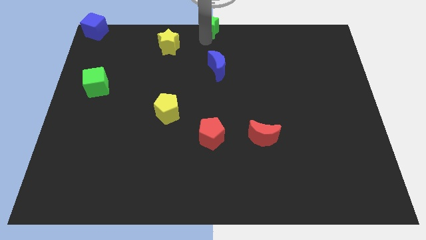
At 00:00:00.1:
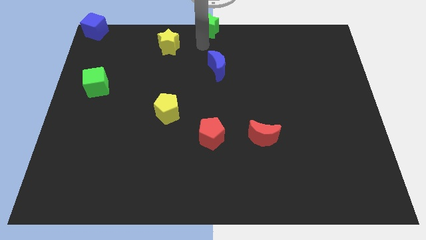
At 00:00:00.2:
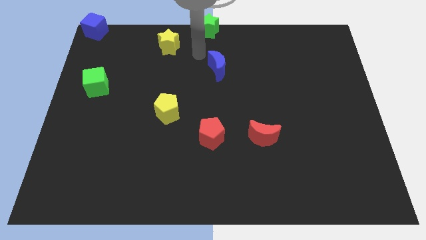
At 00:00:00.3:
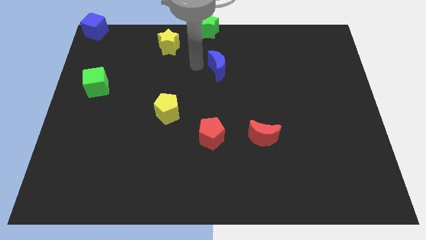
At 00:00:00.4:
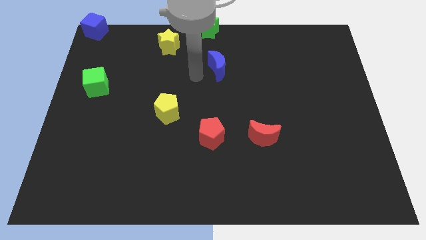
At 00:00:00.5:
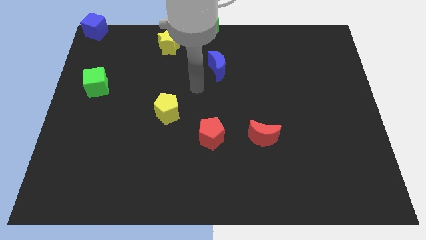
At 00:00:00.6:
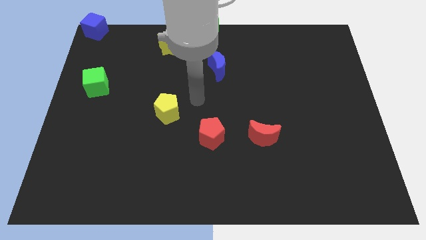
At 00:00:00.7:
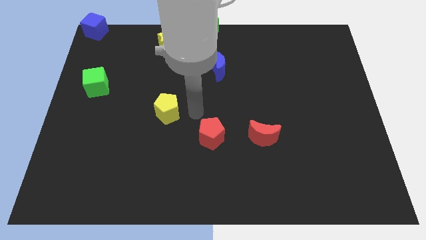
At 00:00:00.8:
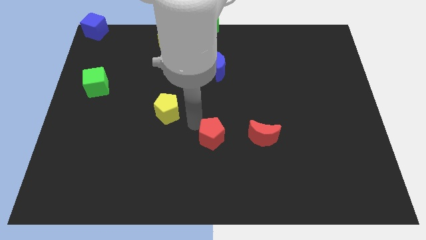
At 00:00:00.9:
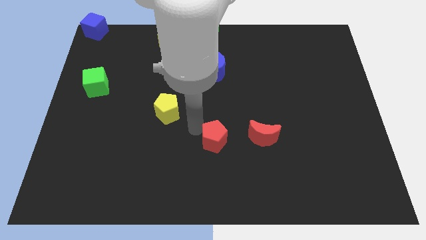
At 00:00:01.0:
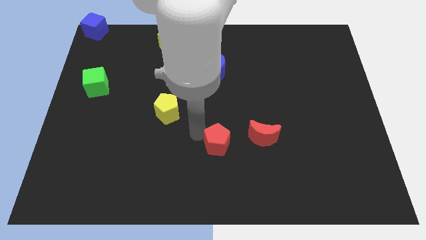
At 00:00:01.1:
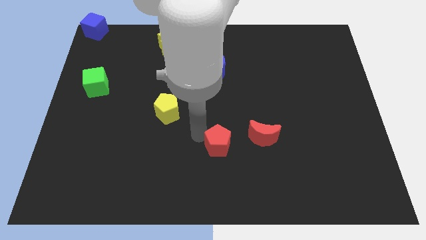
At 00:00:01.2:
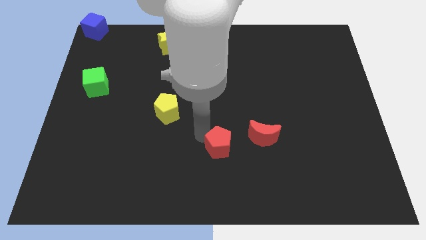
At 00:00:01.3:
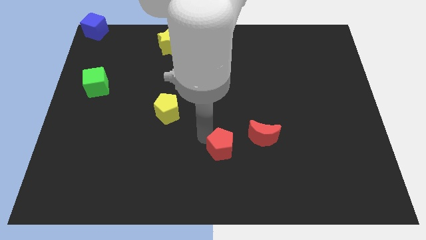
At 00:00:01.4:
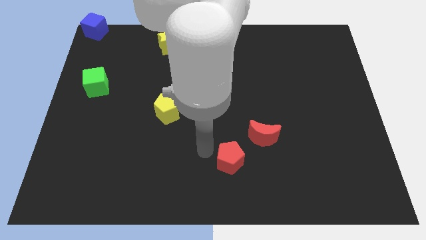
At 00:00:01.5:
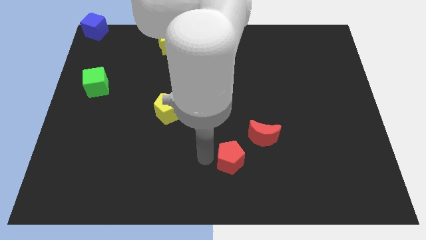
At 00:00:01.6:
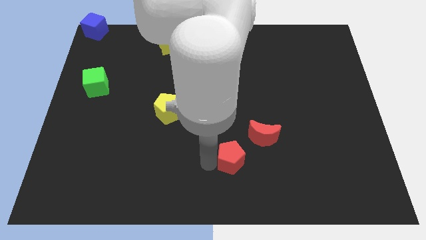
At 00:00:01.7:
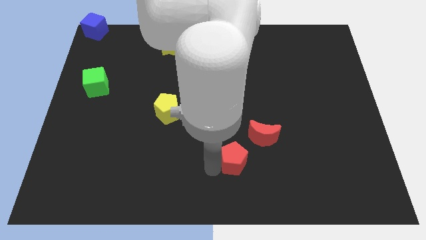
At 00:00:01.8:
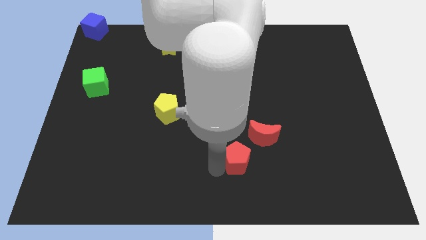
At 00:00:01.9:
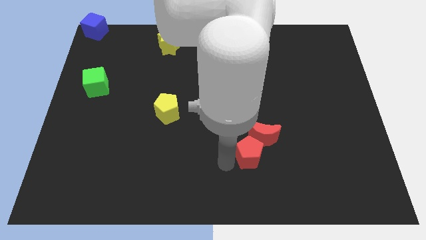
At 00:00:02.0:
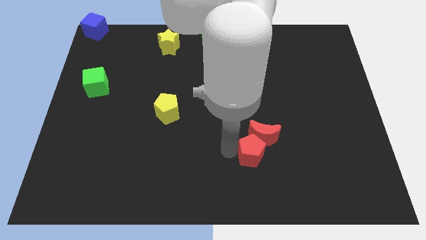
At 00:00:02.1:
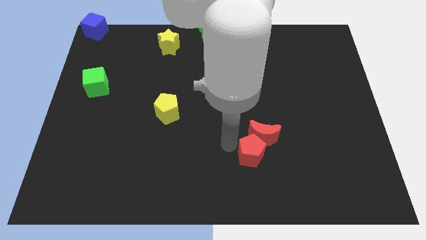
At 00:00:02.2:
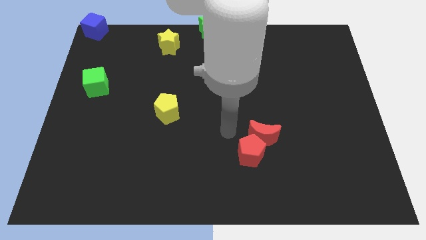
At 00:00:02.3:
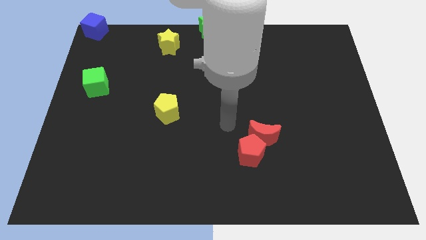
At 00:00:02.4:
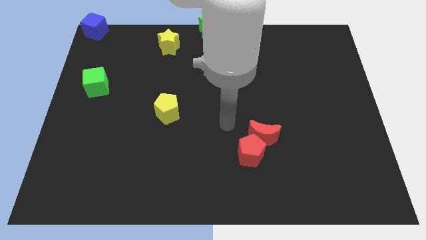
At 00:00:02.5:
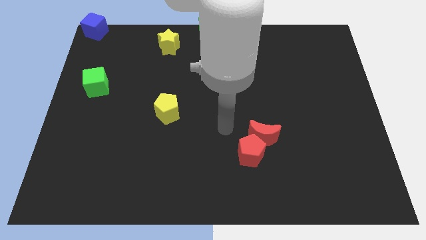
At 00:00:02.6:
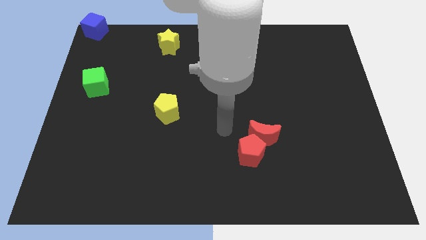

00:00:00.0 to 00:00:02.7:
move the red pentagon at the bottom of red moon

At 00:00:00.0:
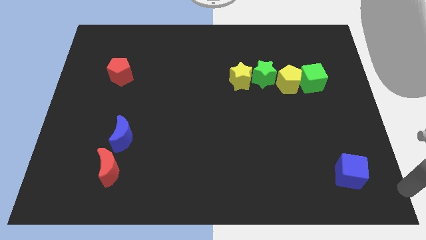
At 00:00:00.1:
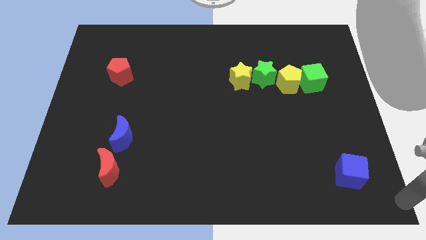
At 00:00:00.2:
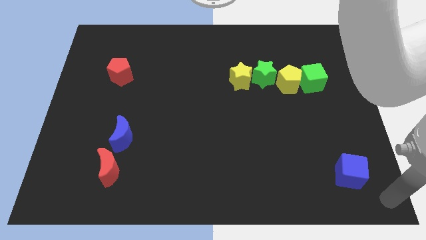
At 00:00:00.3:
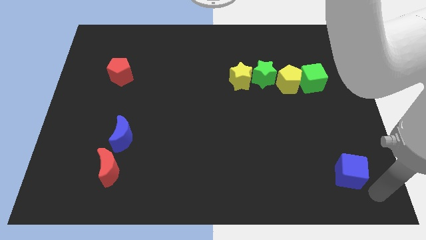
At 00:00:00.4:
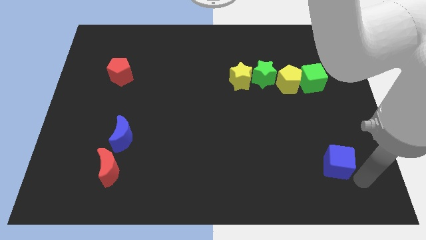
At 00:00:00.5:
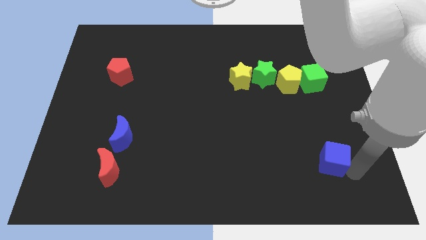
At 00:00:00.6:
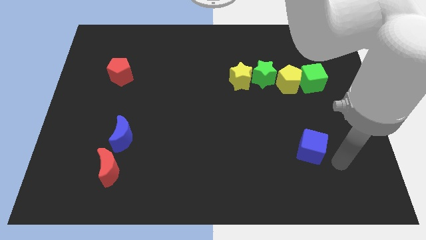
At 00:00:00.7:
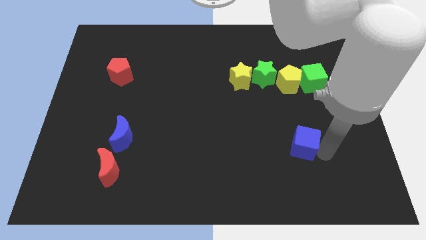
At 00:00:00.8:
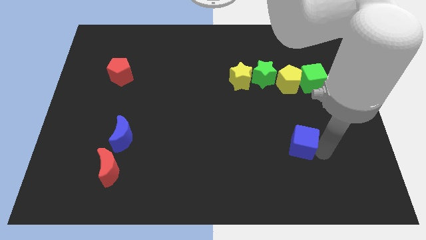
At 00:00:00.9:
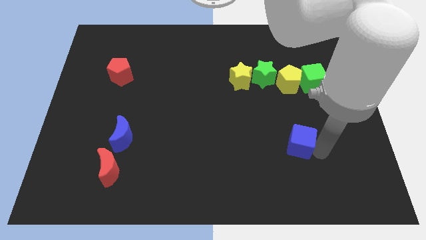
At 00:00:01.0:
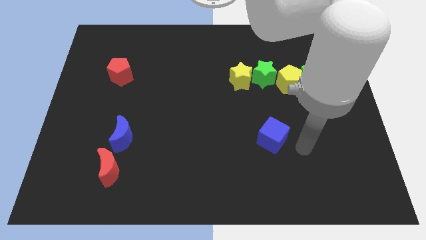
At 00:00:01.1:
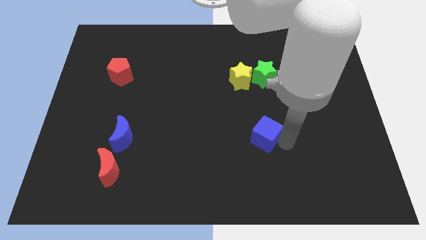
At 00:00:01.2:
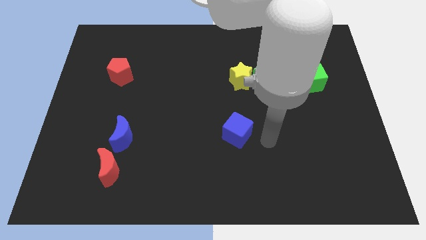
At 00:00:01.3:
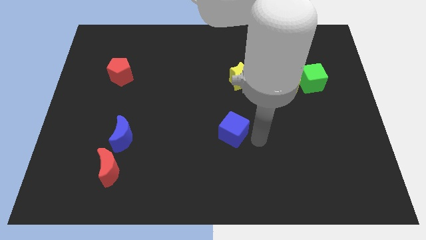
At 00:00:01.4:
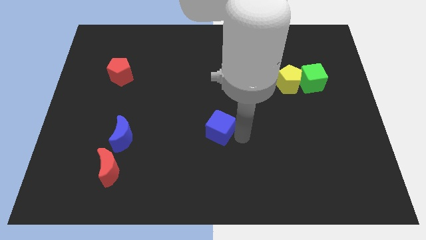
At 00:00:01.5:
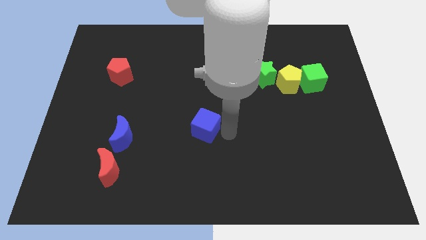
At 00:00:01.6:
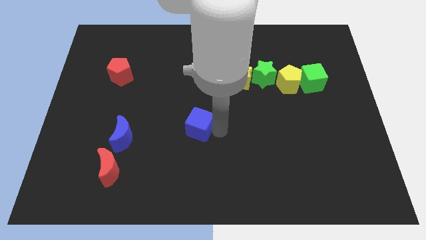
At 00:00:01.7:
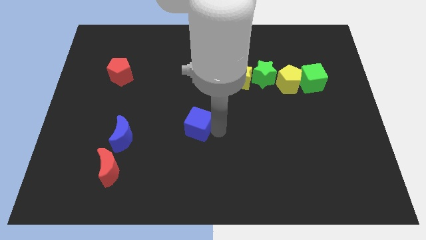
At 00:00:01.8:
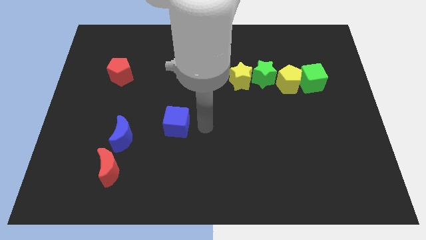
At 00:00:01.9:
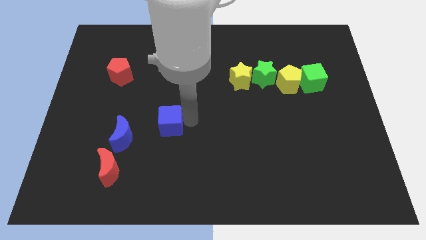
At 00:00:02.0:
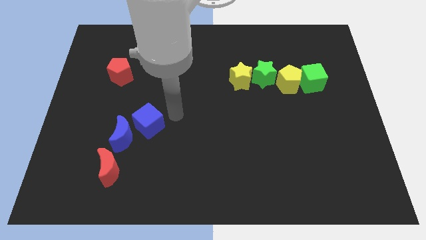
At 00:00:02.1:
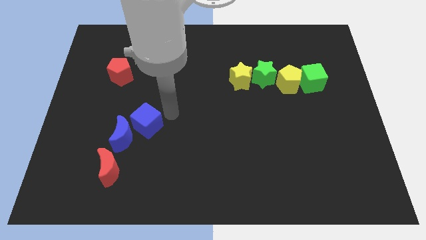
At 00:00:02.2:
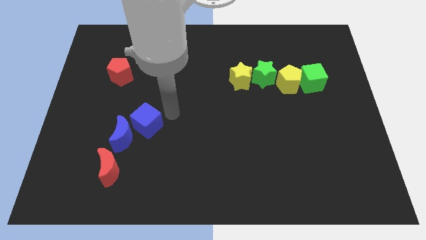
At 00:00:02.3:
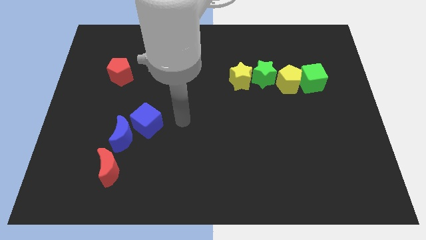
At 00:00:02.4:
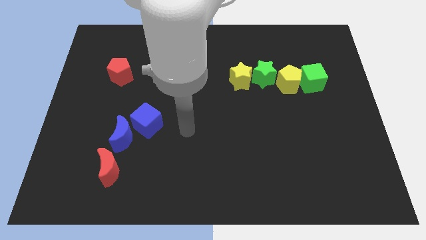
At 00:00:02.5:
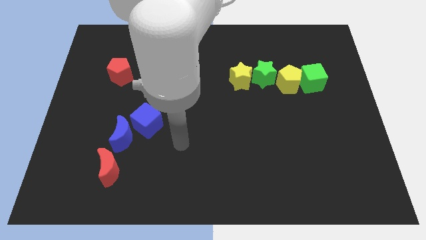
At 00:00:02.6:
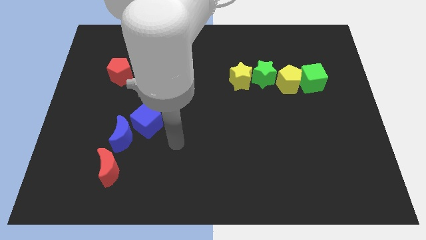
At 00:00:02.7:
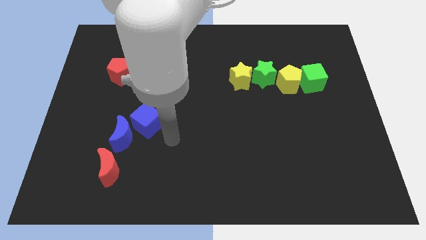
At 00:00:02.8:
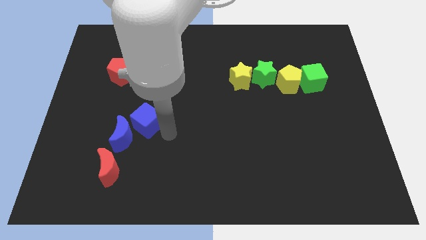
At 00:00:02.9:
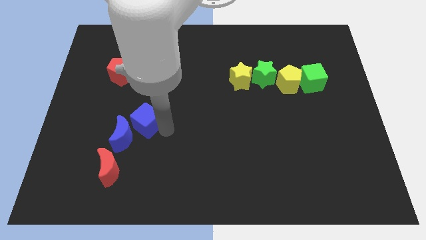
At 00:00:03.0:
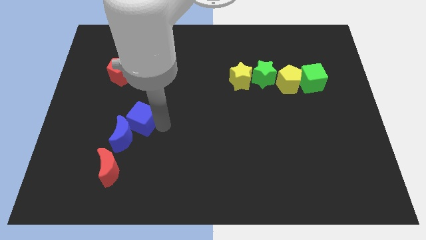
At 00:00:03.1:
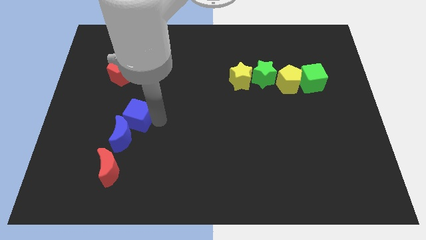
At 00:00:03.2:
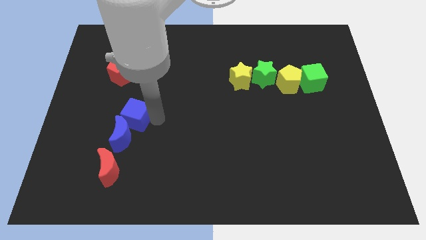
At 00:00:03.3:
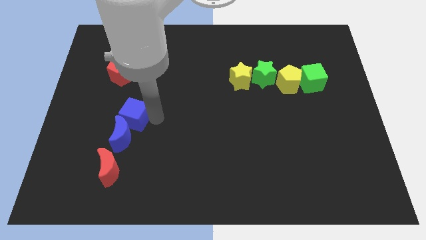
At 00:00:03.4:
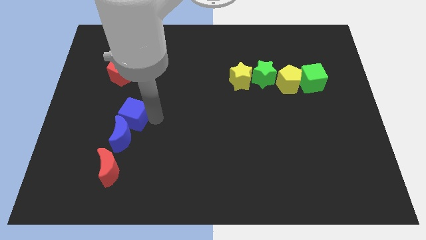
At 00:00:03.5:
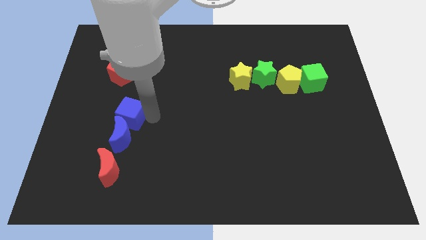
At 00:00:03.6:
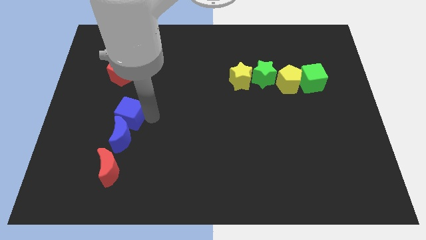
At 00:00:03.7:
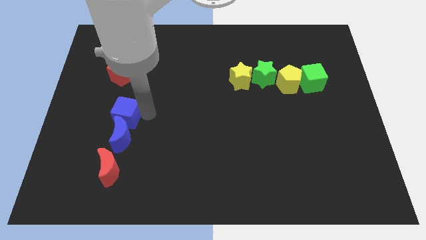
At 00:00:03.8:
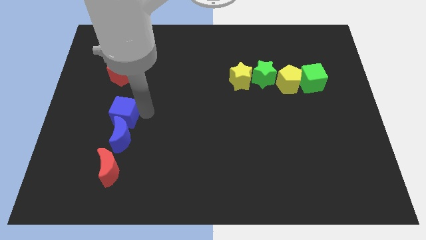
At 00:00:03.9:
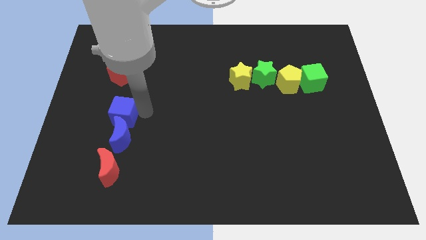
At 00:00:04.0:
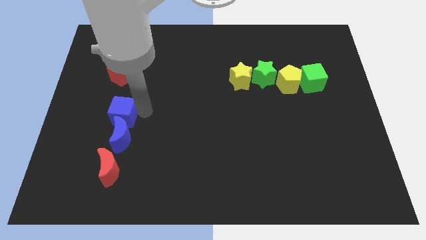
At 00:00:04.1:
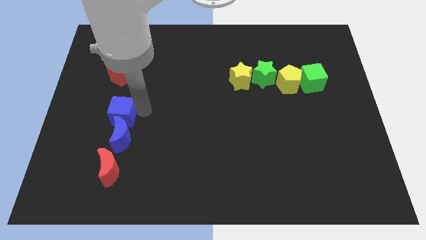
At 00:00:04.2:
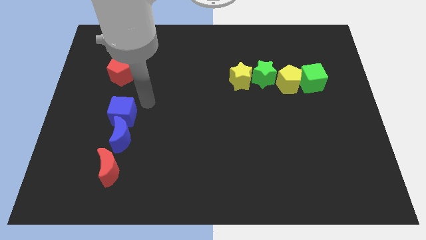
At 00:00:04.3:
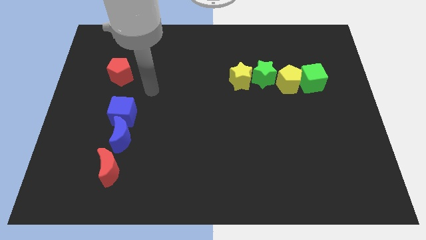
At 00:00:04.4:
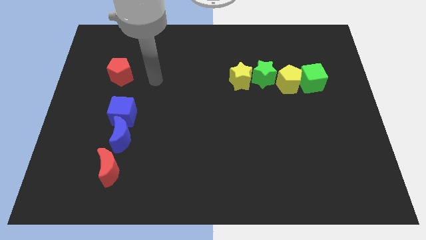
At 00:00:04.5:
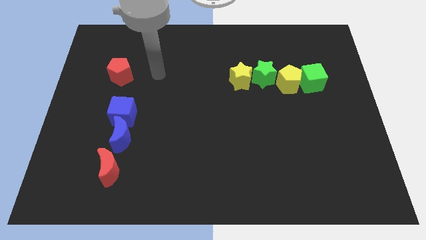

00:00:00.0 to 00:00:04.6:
place blue cube on the top of blue crescent

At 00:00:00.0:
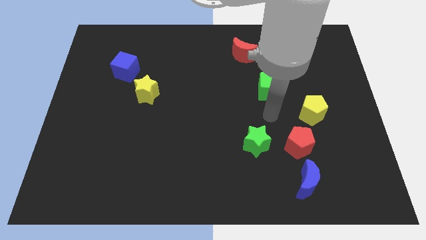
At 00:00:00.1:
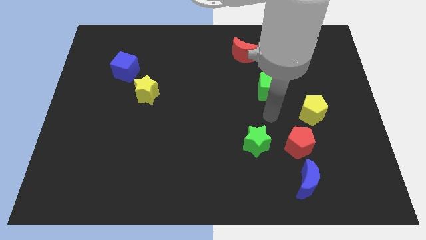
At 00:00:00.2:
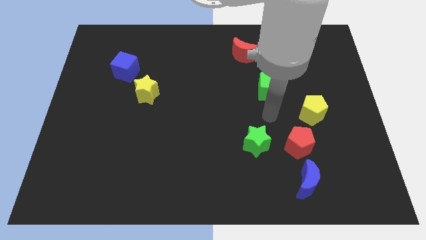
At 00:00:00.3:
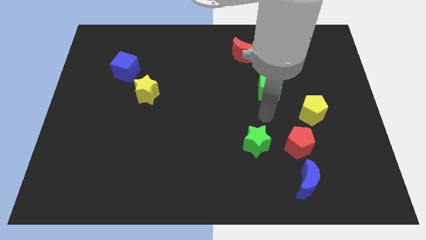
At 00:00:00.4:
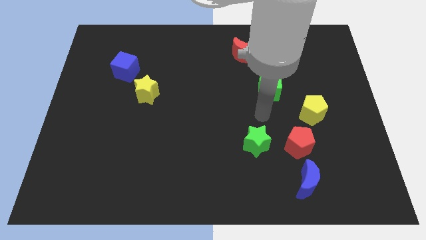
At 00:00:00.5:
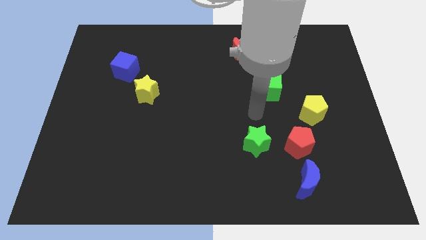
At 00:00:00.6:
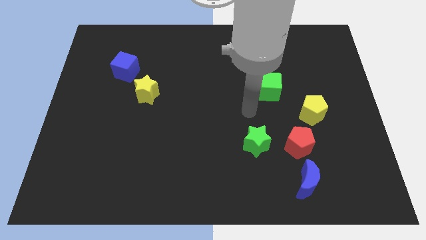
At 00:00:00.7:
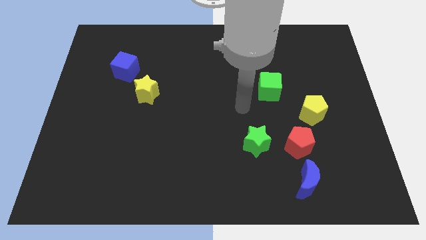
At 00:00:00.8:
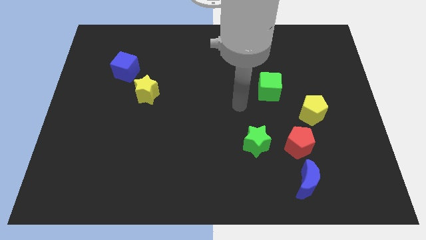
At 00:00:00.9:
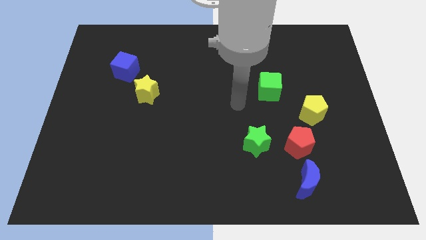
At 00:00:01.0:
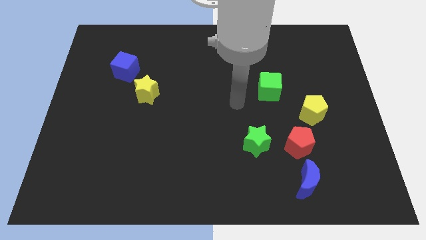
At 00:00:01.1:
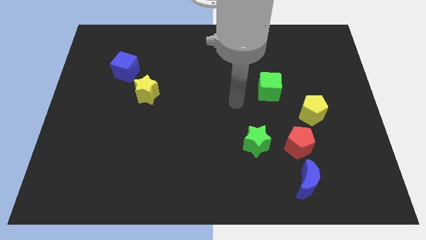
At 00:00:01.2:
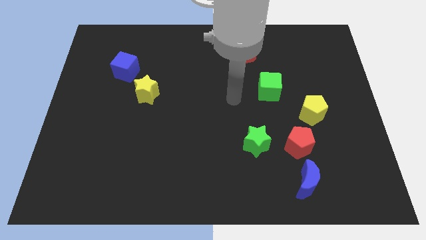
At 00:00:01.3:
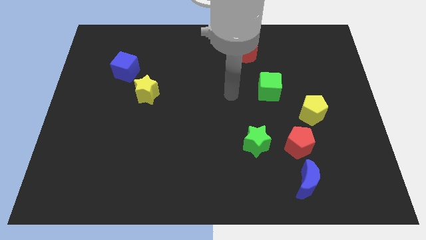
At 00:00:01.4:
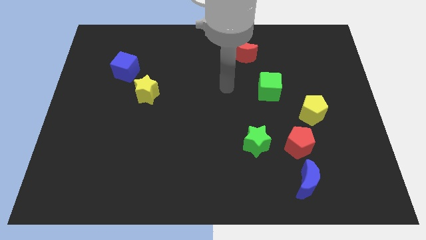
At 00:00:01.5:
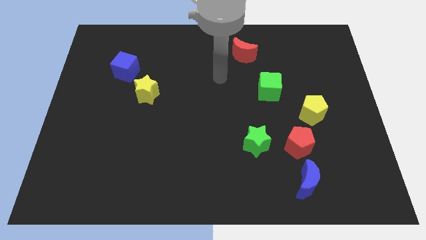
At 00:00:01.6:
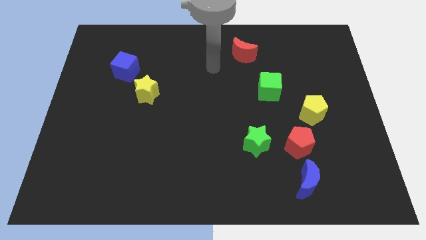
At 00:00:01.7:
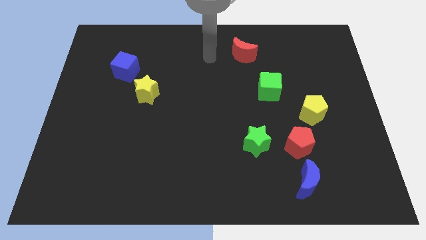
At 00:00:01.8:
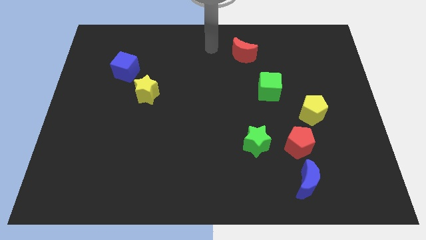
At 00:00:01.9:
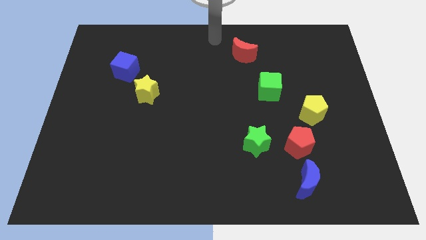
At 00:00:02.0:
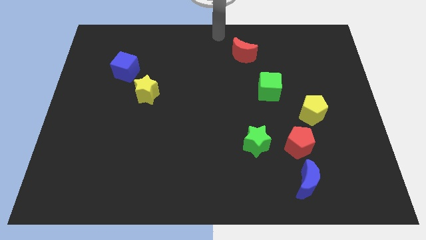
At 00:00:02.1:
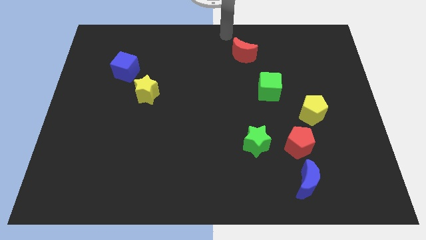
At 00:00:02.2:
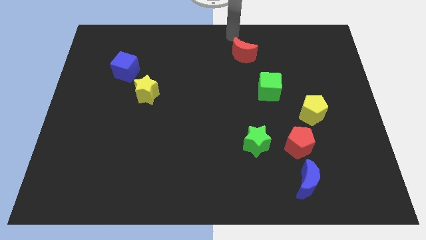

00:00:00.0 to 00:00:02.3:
place your arm to the top of red moon
